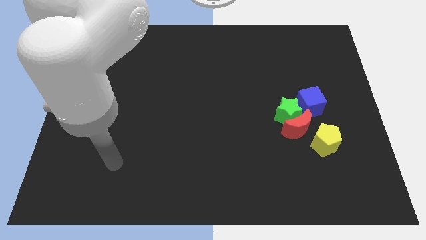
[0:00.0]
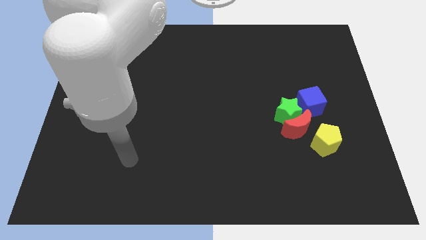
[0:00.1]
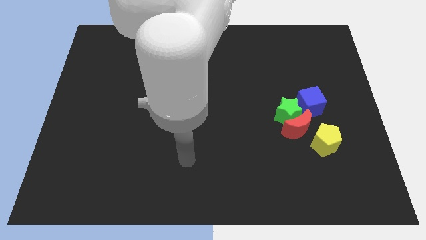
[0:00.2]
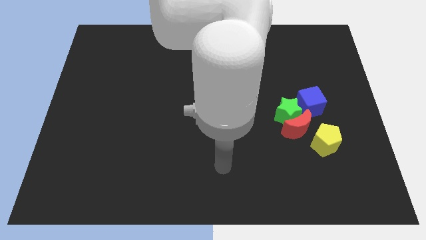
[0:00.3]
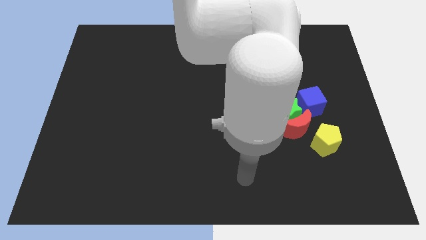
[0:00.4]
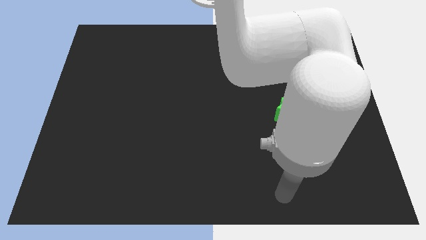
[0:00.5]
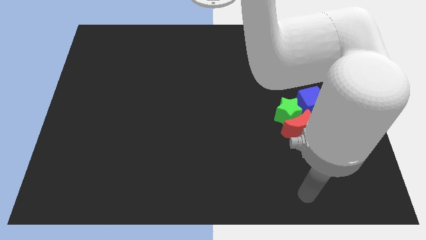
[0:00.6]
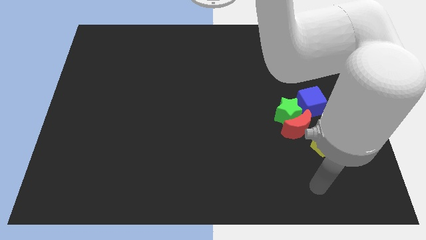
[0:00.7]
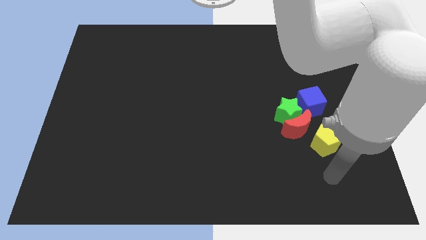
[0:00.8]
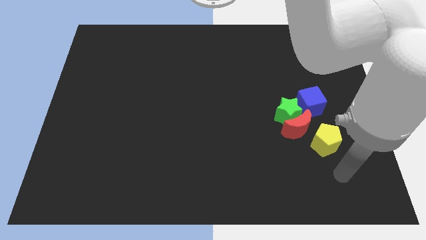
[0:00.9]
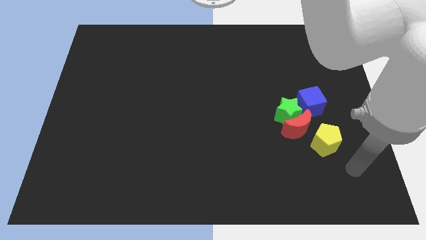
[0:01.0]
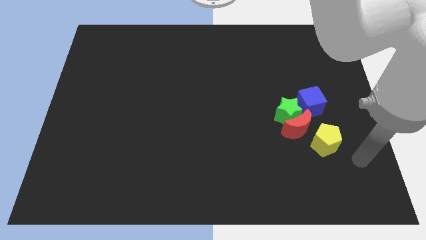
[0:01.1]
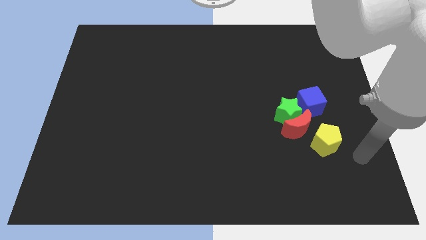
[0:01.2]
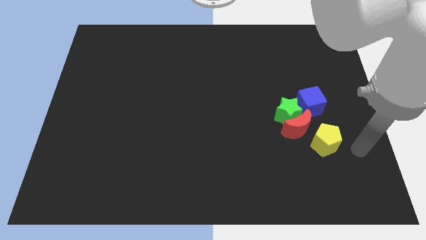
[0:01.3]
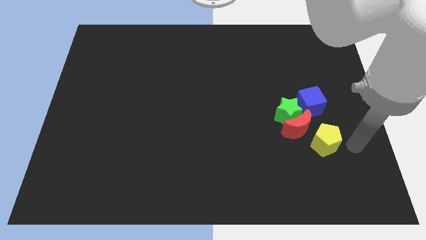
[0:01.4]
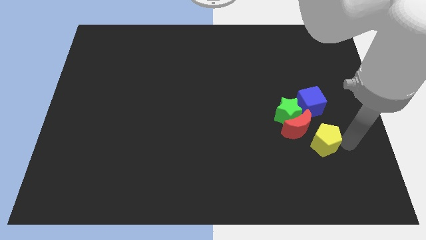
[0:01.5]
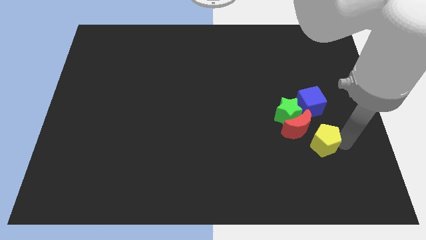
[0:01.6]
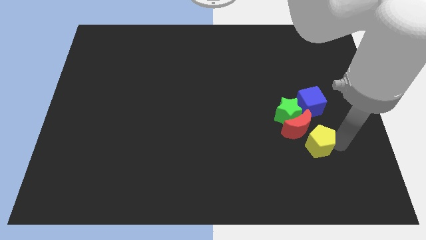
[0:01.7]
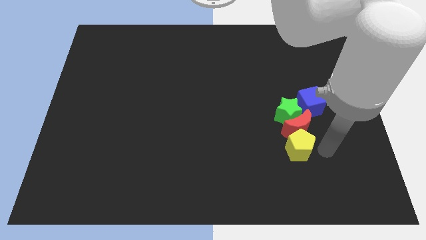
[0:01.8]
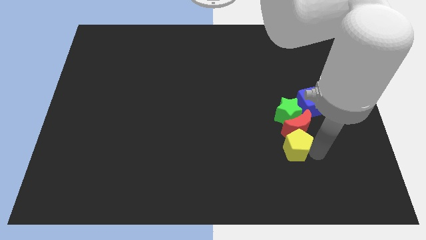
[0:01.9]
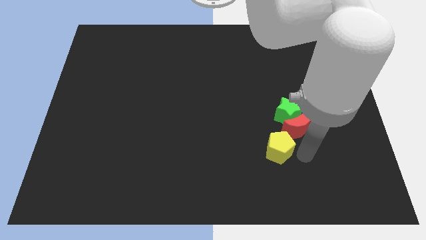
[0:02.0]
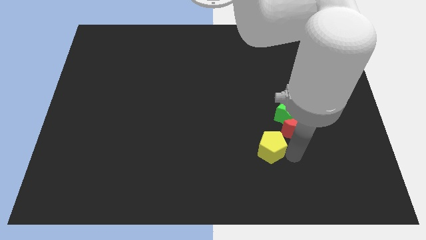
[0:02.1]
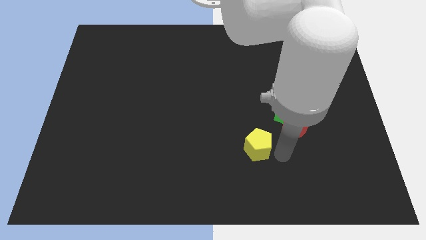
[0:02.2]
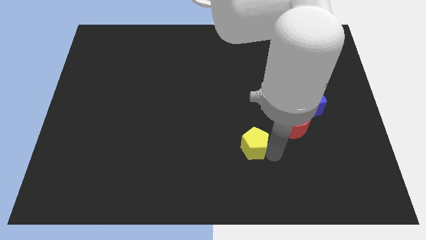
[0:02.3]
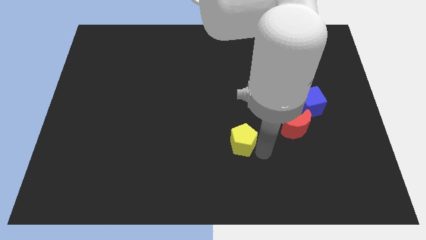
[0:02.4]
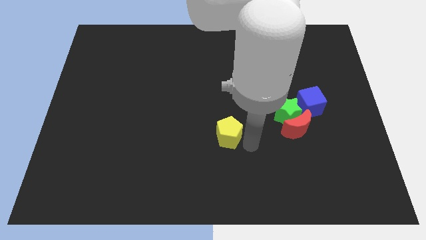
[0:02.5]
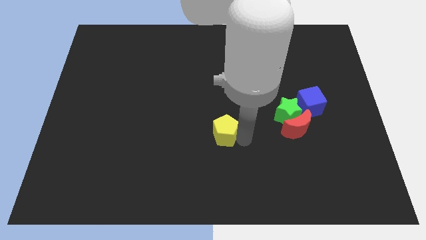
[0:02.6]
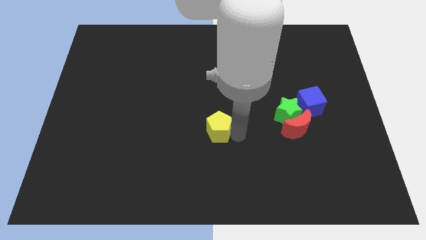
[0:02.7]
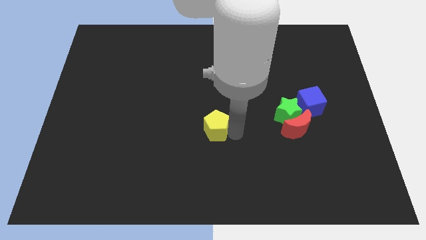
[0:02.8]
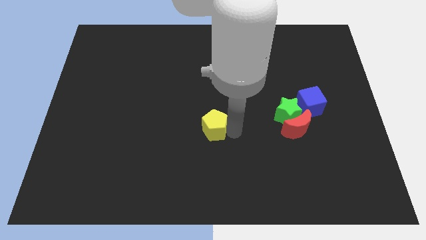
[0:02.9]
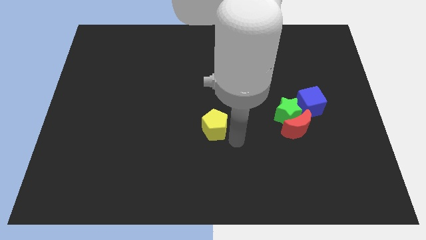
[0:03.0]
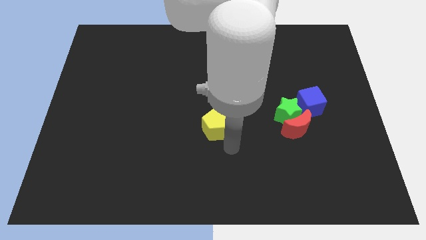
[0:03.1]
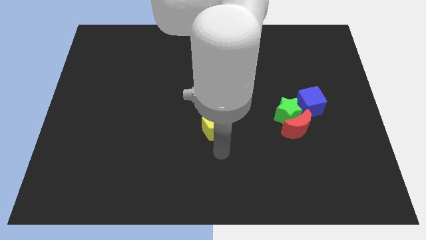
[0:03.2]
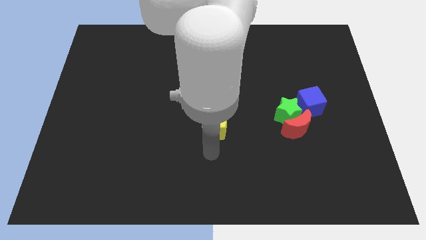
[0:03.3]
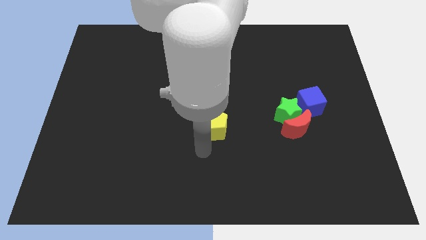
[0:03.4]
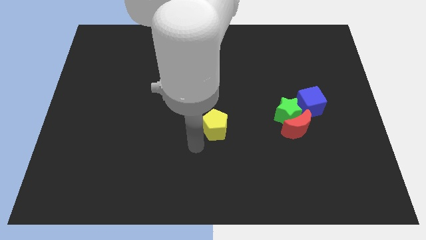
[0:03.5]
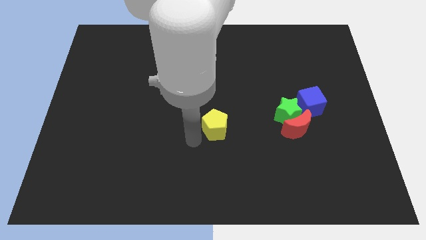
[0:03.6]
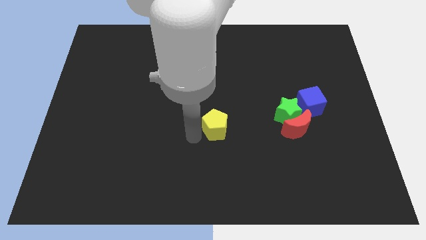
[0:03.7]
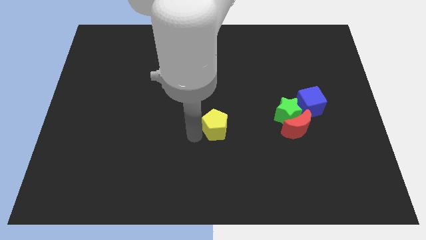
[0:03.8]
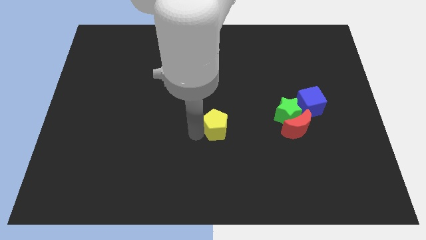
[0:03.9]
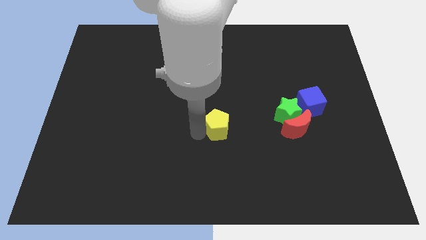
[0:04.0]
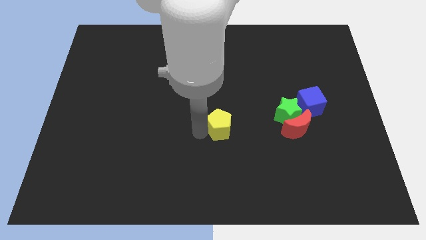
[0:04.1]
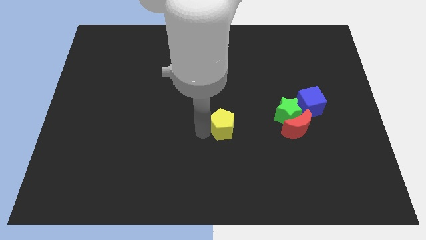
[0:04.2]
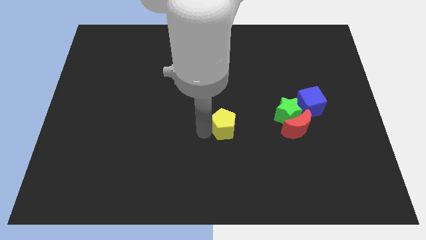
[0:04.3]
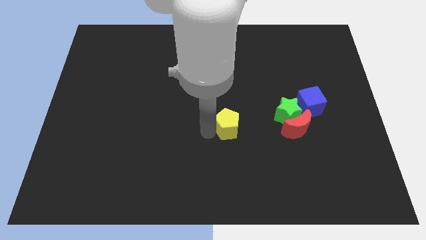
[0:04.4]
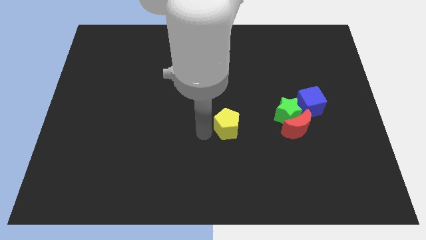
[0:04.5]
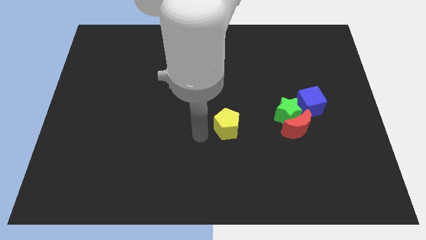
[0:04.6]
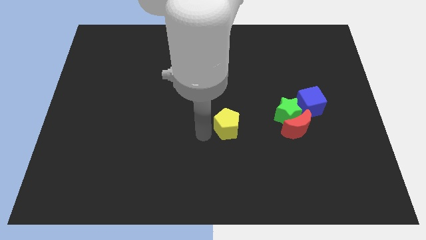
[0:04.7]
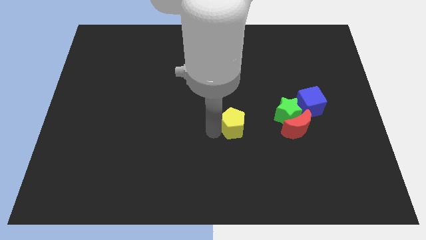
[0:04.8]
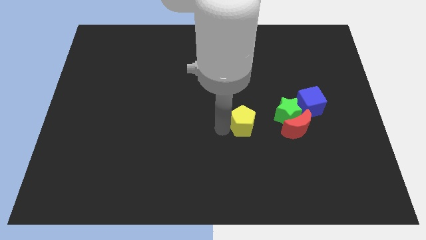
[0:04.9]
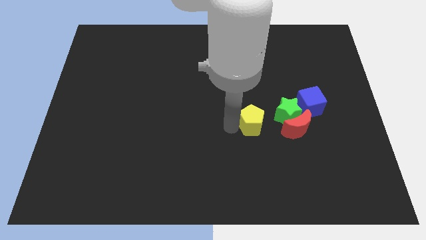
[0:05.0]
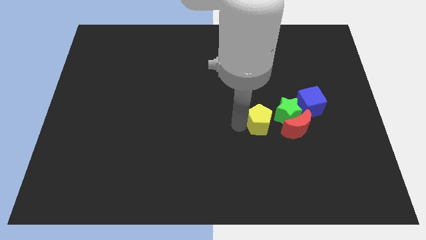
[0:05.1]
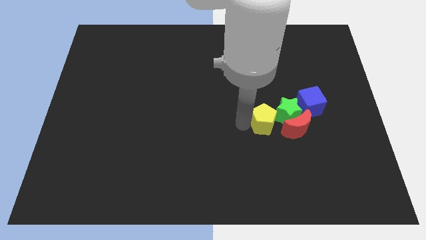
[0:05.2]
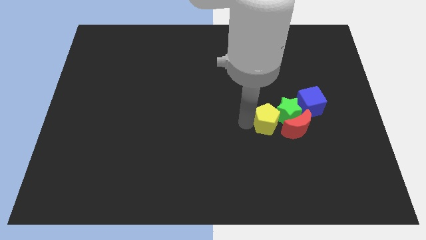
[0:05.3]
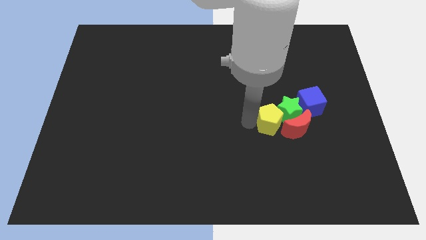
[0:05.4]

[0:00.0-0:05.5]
slide the yellow block towards the green star

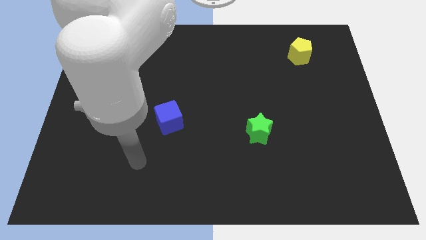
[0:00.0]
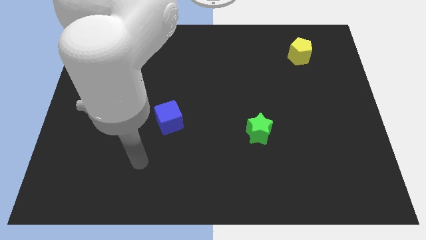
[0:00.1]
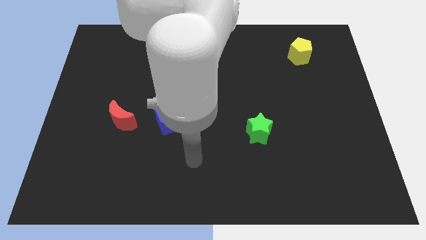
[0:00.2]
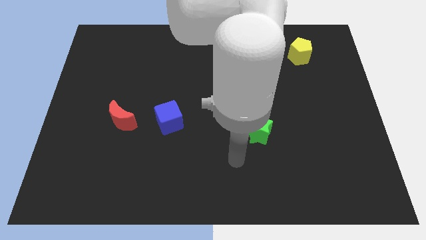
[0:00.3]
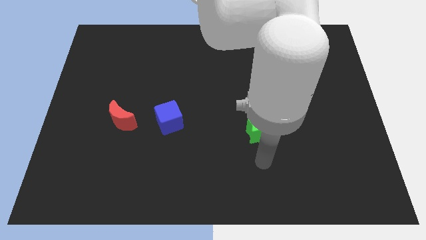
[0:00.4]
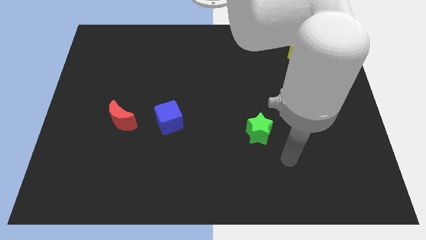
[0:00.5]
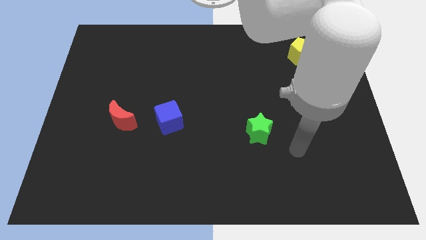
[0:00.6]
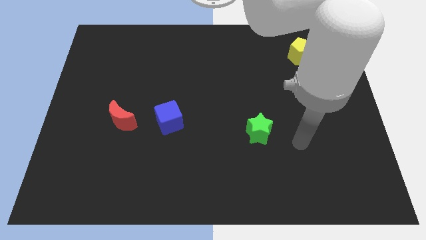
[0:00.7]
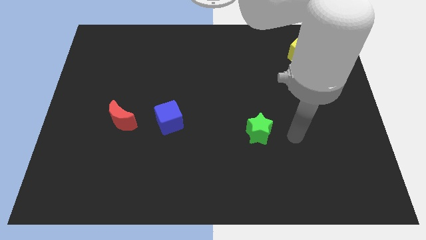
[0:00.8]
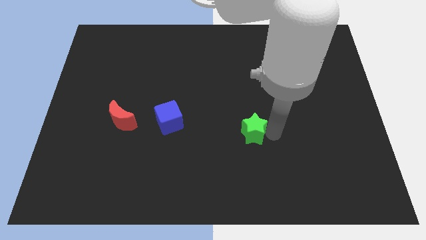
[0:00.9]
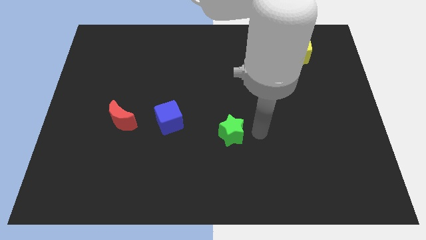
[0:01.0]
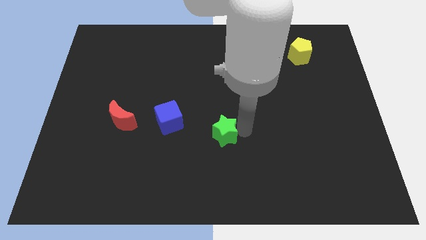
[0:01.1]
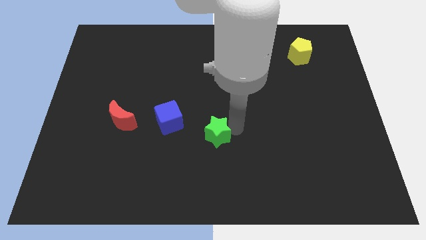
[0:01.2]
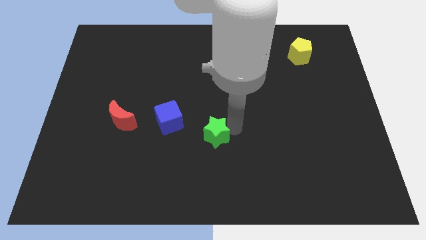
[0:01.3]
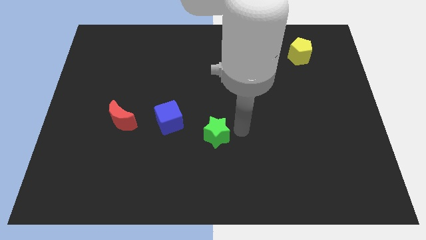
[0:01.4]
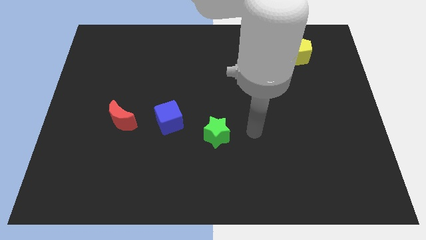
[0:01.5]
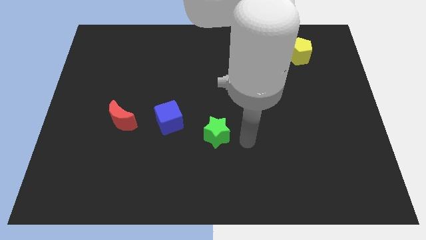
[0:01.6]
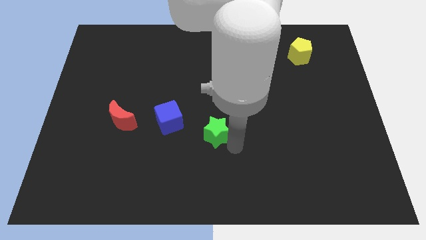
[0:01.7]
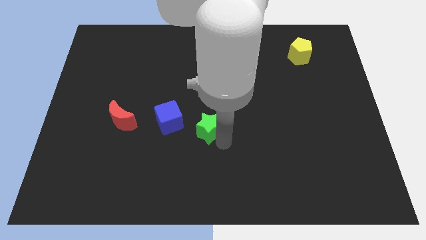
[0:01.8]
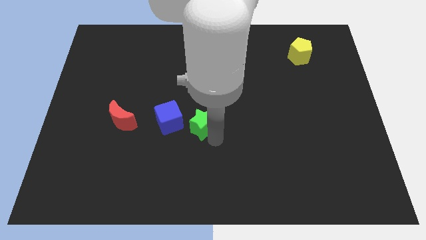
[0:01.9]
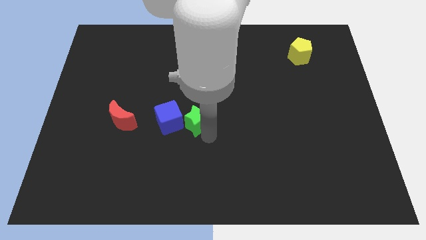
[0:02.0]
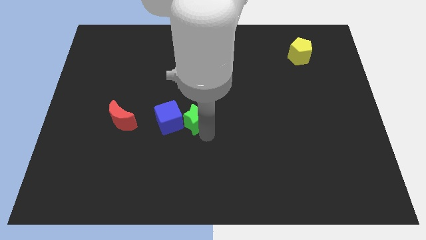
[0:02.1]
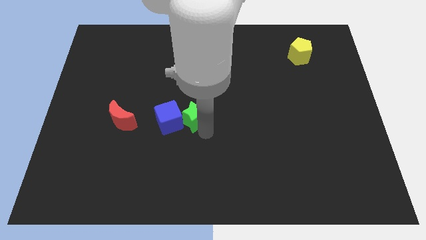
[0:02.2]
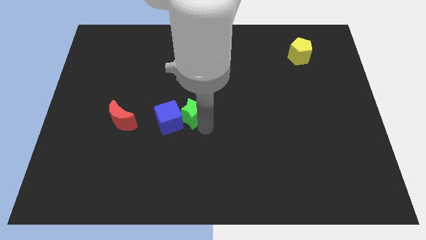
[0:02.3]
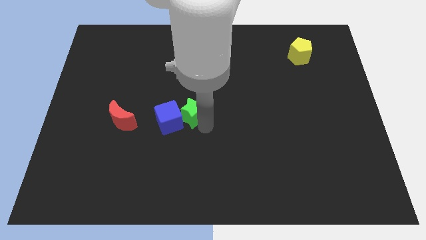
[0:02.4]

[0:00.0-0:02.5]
push the green block towards the blue cube

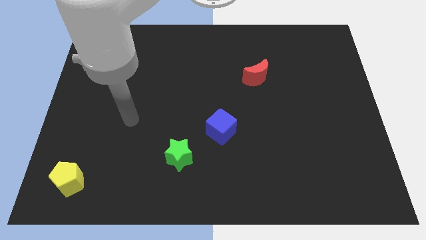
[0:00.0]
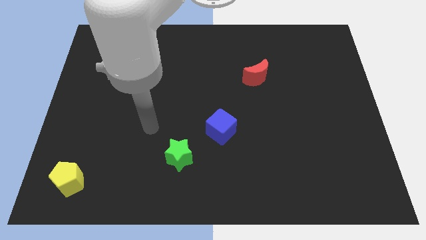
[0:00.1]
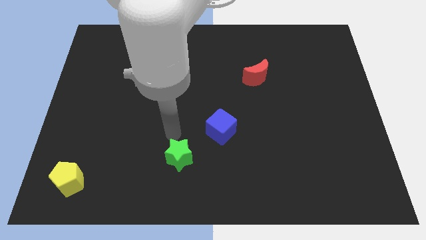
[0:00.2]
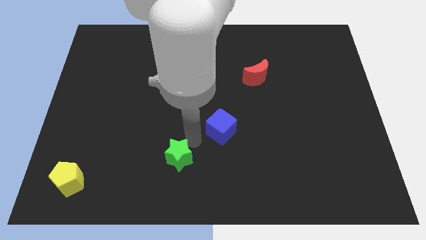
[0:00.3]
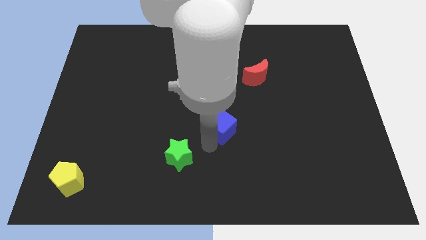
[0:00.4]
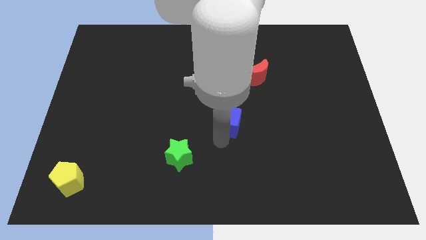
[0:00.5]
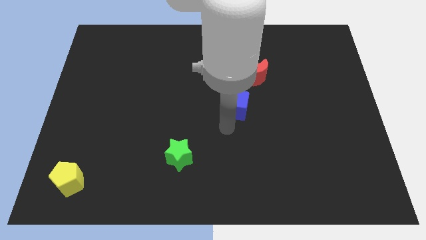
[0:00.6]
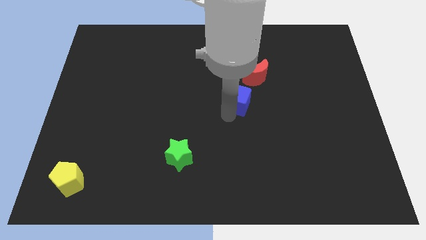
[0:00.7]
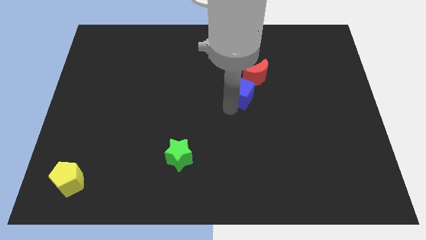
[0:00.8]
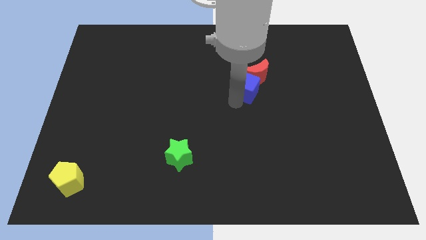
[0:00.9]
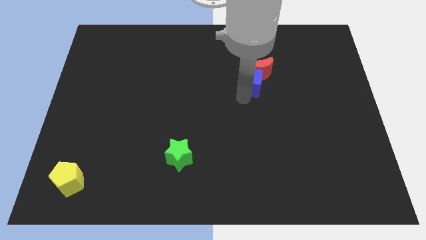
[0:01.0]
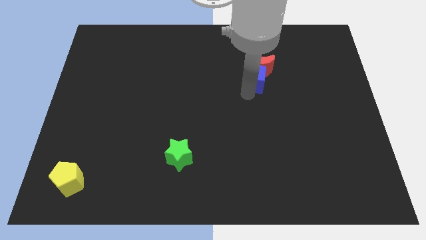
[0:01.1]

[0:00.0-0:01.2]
slide the blue block to the red moon
